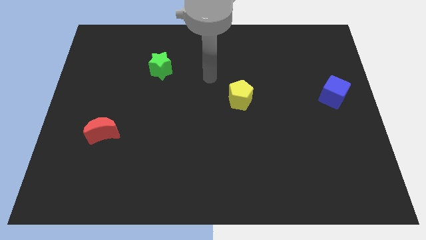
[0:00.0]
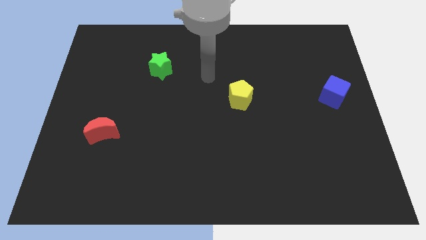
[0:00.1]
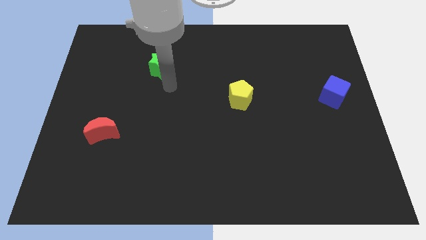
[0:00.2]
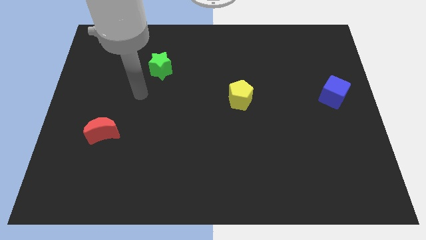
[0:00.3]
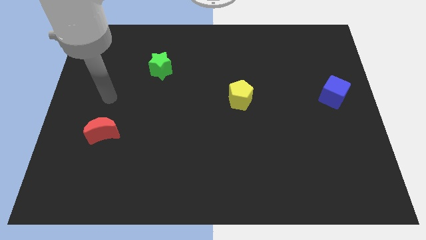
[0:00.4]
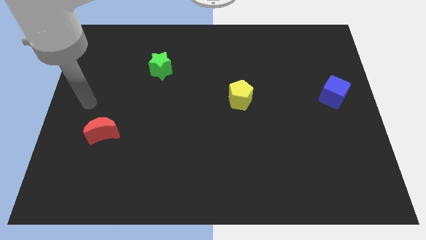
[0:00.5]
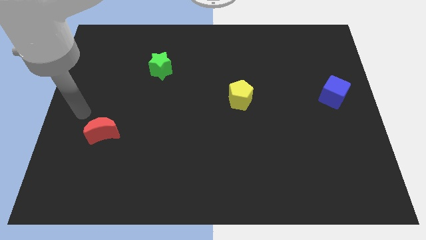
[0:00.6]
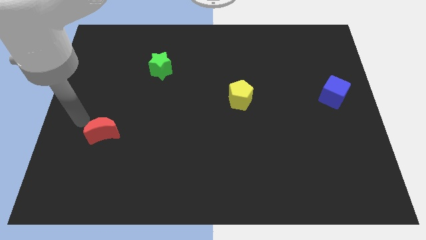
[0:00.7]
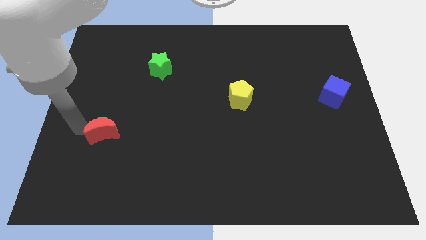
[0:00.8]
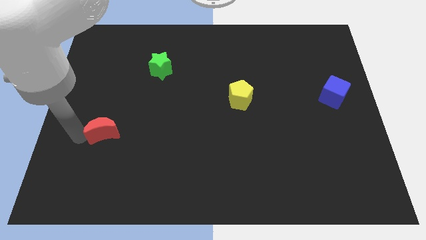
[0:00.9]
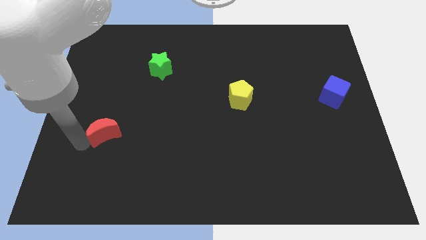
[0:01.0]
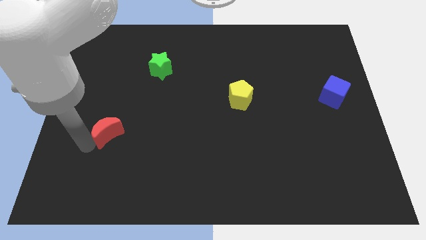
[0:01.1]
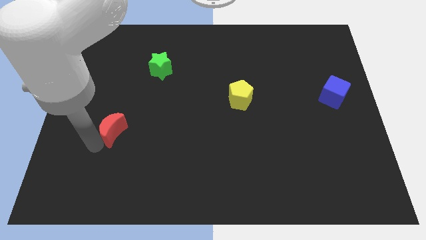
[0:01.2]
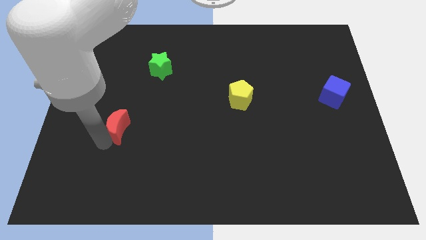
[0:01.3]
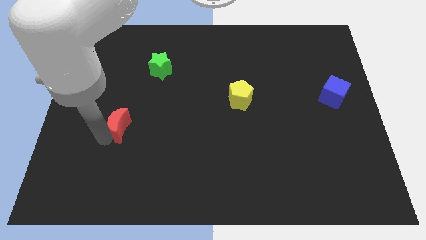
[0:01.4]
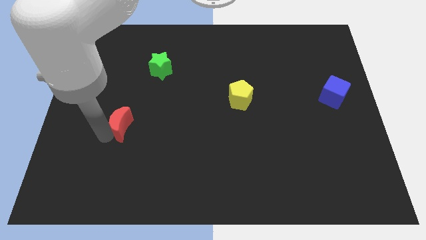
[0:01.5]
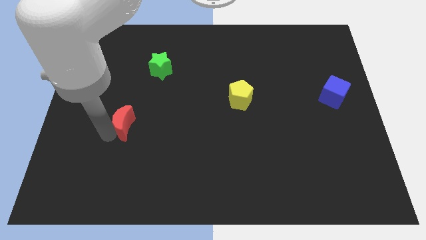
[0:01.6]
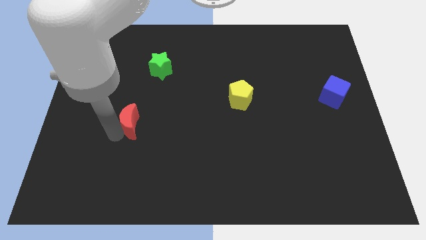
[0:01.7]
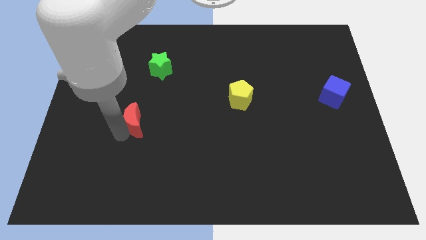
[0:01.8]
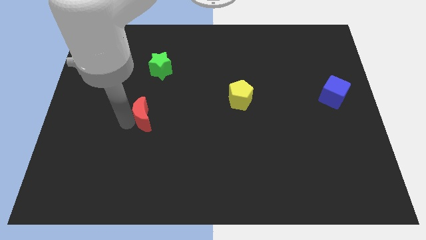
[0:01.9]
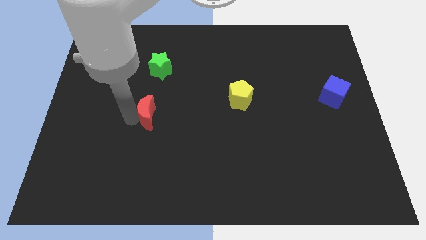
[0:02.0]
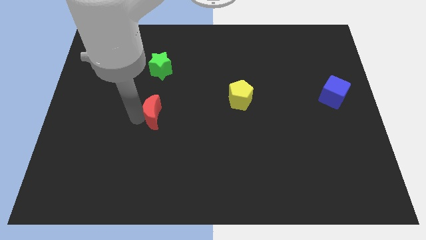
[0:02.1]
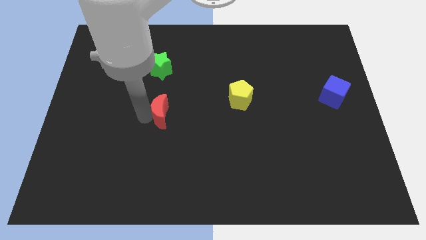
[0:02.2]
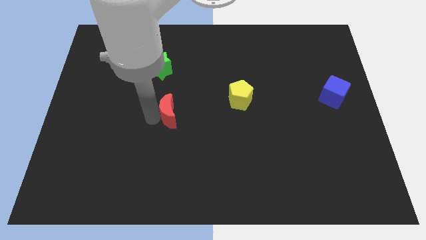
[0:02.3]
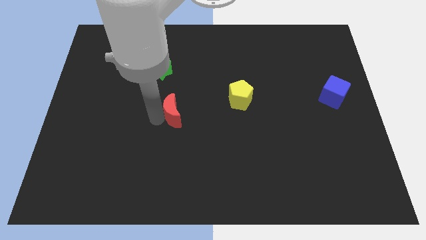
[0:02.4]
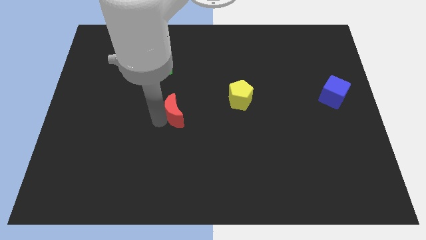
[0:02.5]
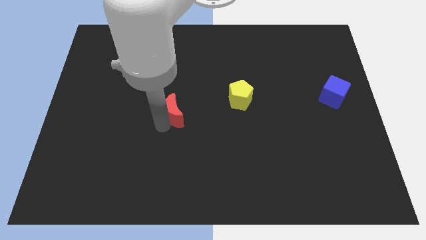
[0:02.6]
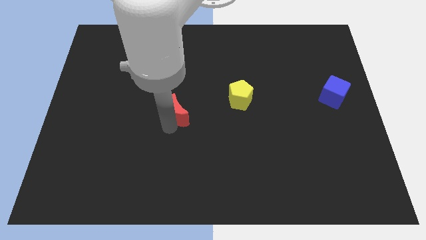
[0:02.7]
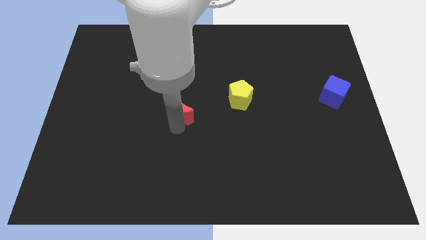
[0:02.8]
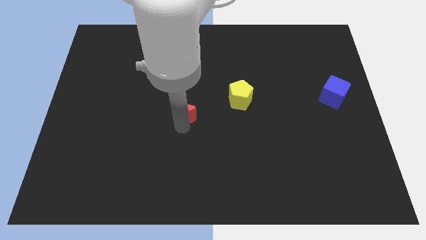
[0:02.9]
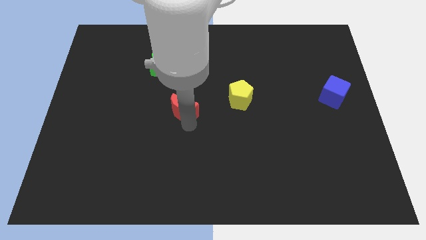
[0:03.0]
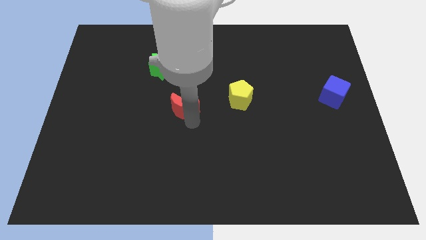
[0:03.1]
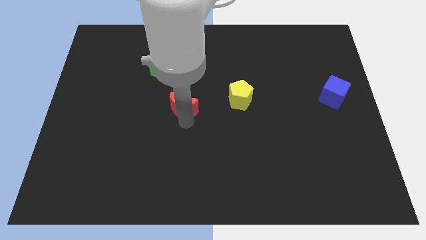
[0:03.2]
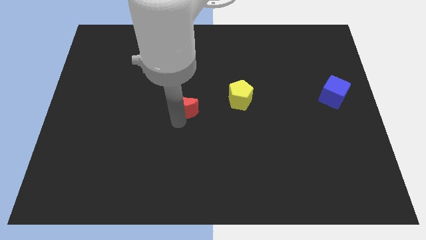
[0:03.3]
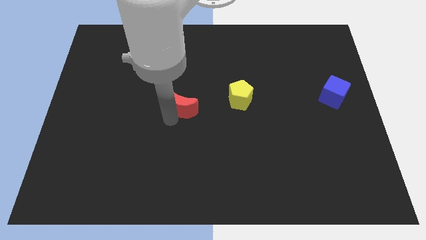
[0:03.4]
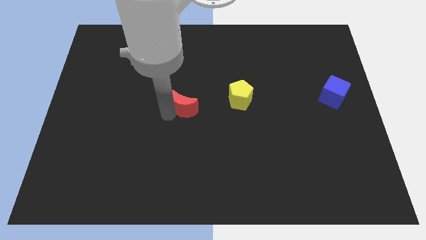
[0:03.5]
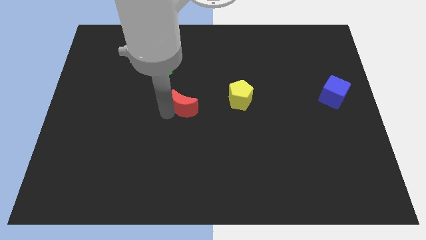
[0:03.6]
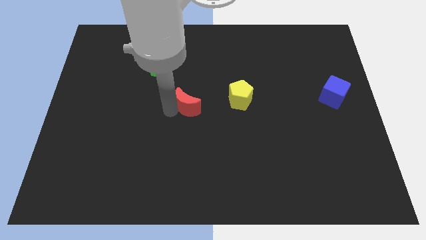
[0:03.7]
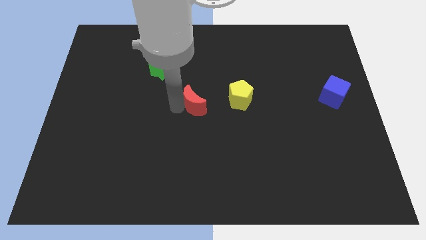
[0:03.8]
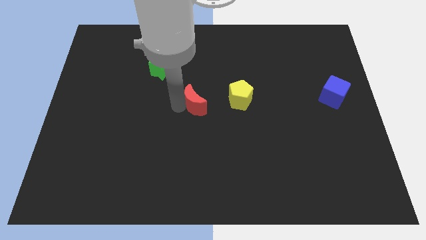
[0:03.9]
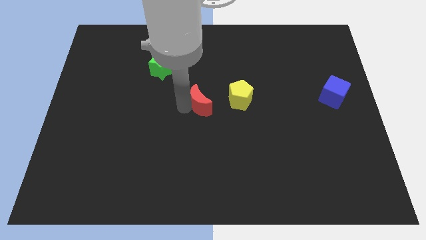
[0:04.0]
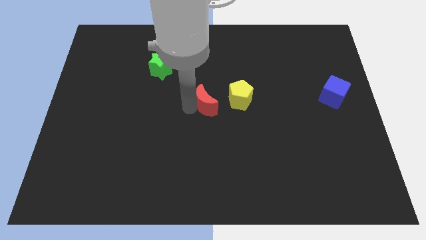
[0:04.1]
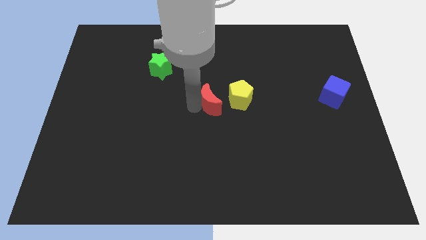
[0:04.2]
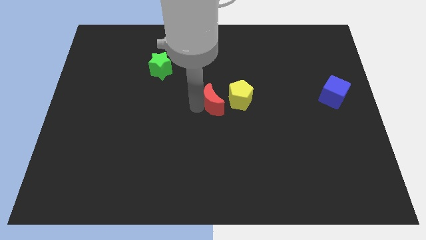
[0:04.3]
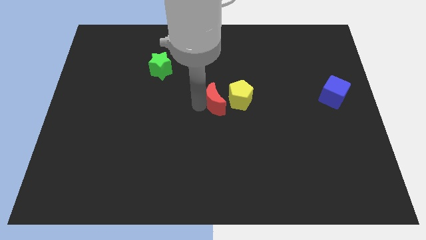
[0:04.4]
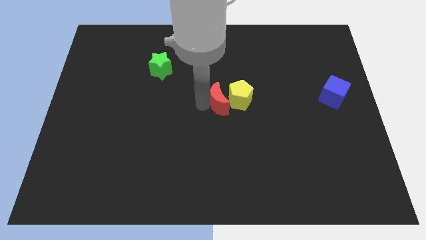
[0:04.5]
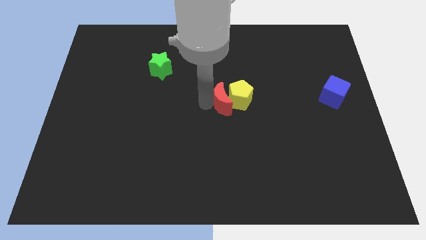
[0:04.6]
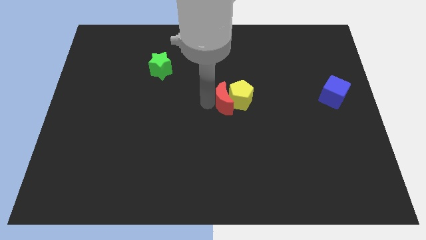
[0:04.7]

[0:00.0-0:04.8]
push the moon next to the yellow pentagon

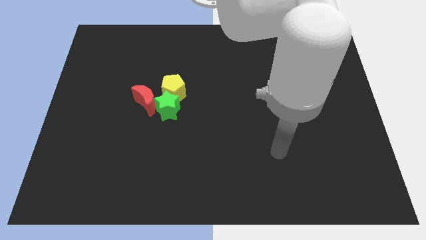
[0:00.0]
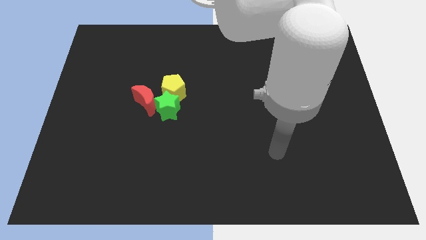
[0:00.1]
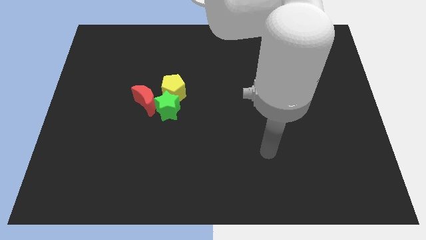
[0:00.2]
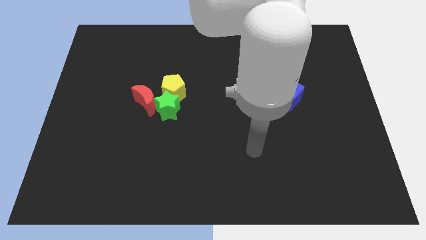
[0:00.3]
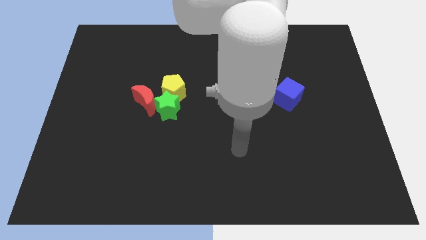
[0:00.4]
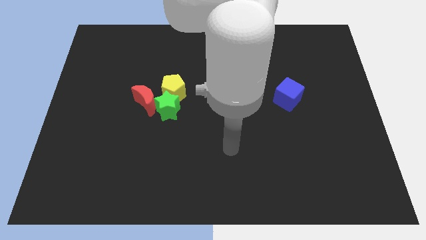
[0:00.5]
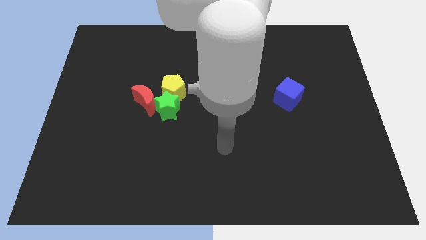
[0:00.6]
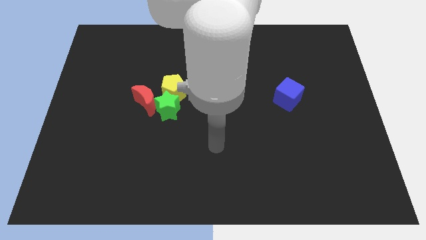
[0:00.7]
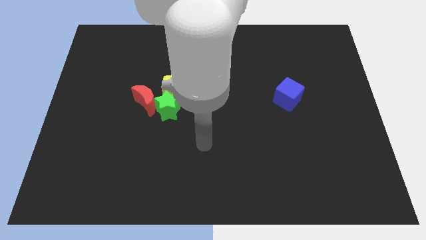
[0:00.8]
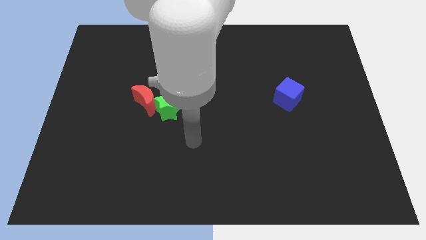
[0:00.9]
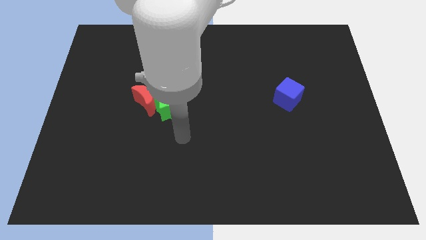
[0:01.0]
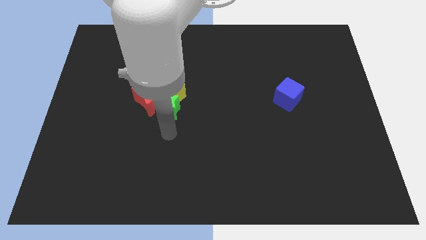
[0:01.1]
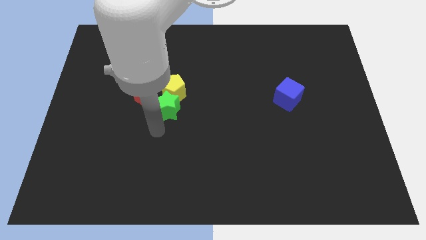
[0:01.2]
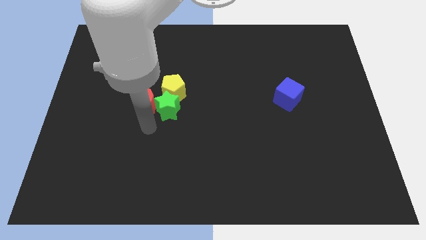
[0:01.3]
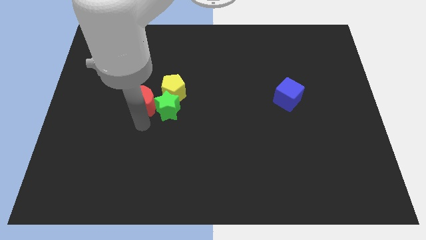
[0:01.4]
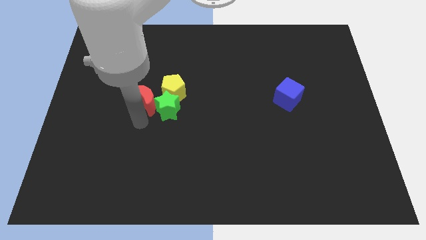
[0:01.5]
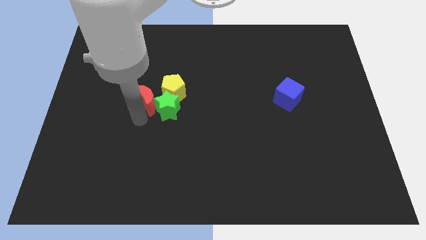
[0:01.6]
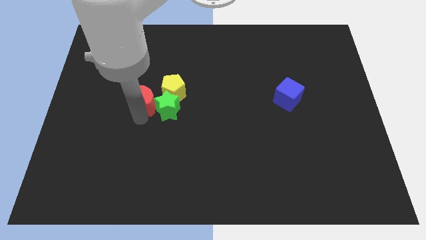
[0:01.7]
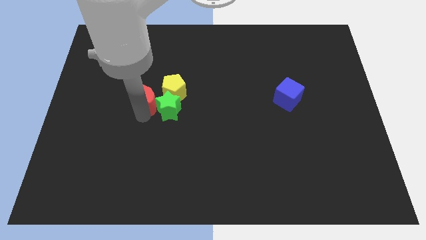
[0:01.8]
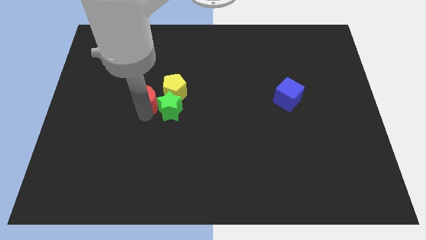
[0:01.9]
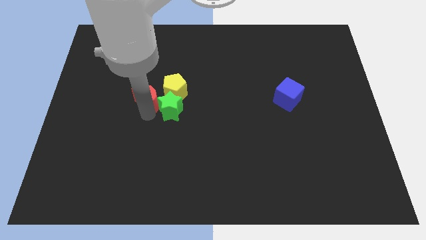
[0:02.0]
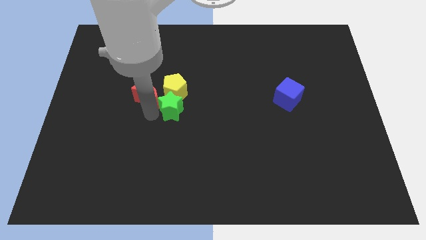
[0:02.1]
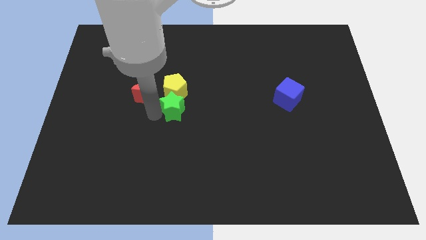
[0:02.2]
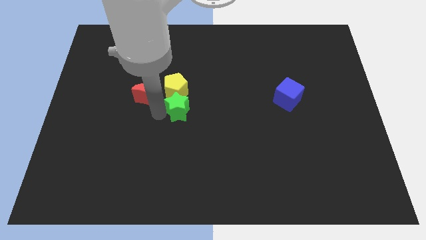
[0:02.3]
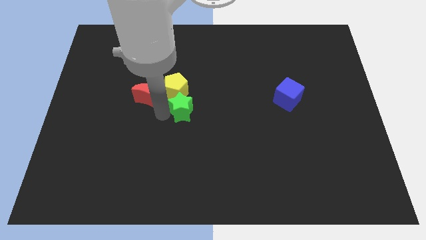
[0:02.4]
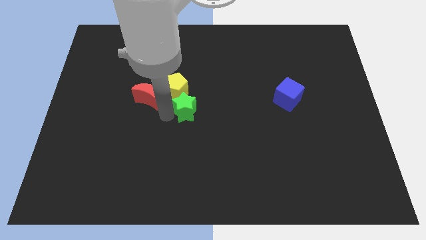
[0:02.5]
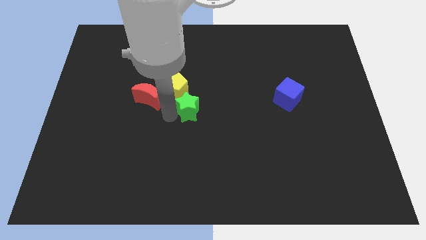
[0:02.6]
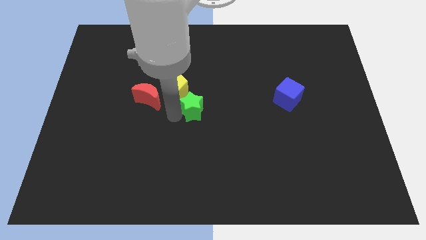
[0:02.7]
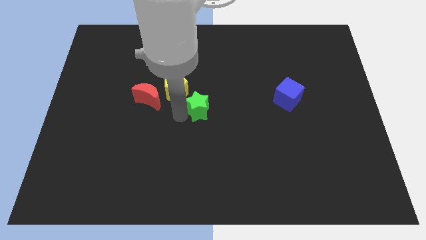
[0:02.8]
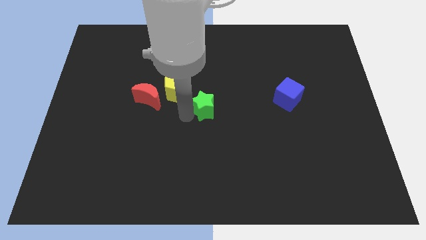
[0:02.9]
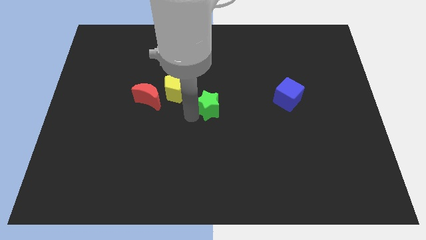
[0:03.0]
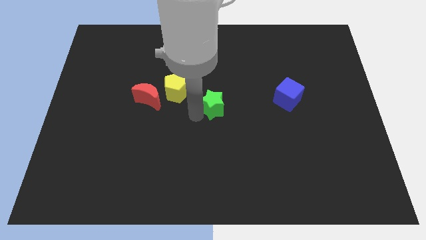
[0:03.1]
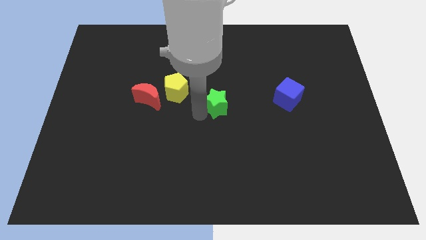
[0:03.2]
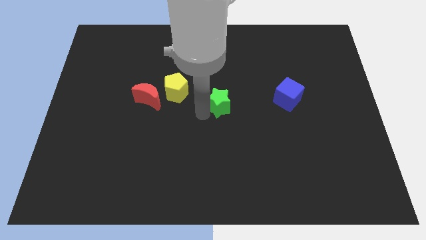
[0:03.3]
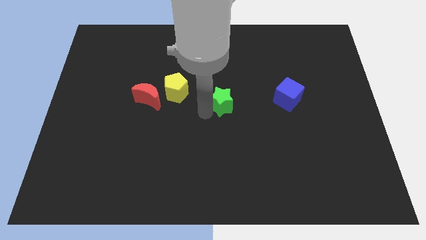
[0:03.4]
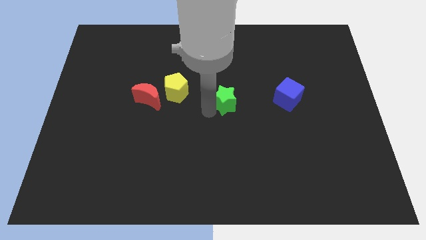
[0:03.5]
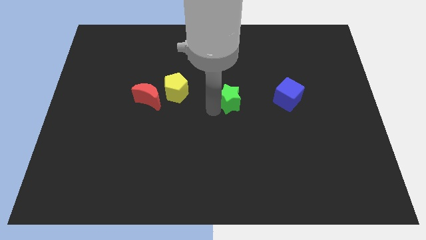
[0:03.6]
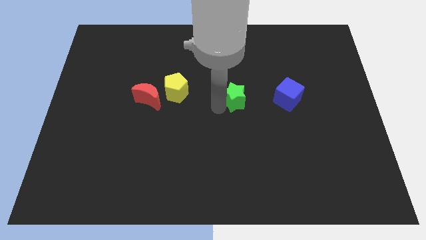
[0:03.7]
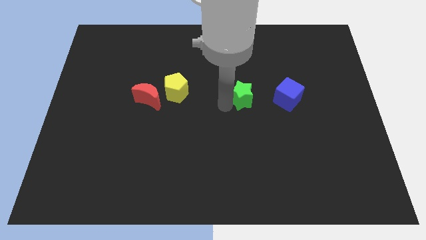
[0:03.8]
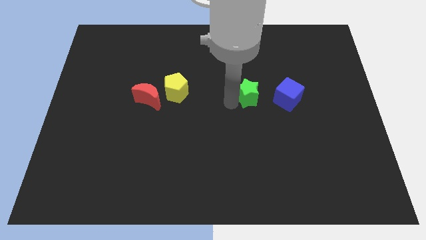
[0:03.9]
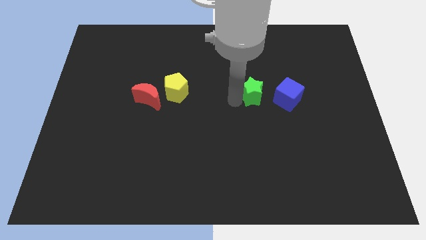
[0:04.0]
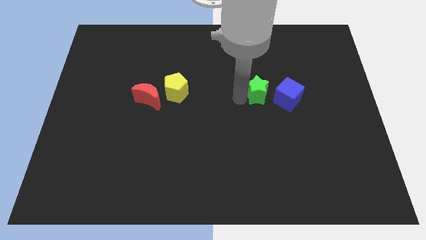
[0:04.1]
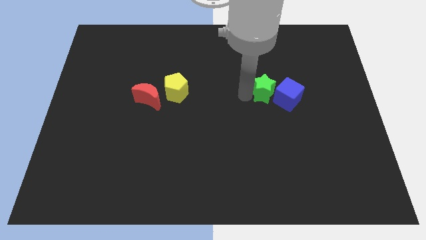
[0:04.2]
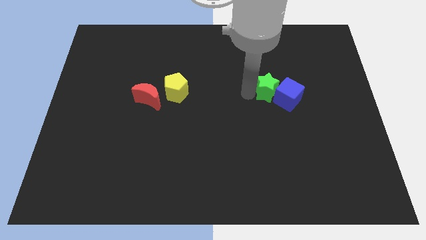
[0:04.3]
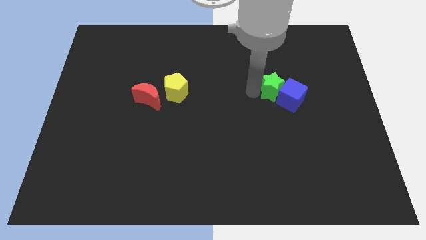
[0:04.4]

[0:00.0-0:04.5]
slide the star next to the cube
